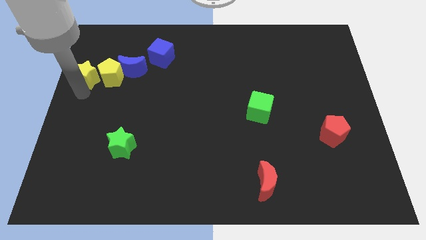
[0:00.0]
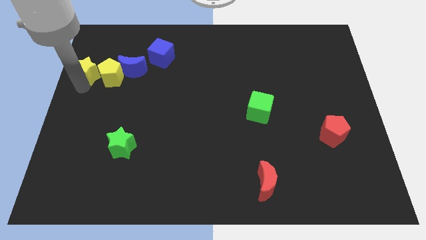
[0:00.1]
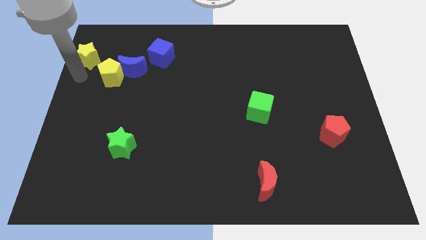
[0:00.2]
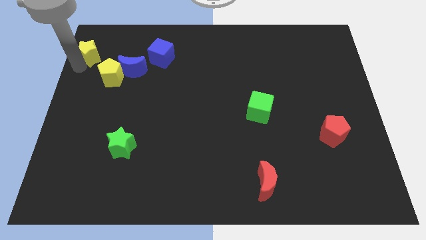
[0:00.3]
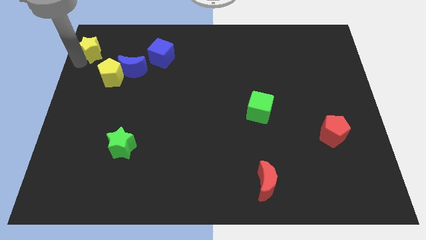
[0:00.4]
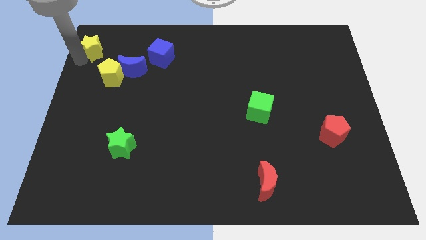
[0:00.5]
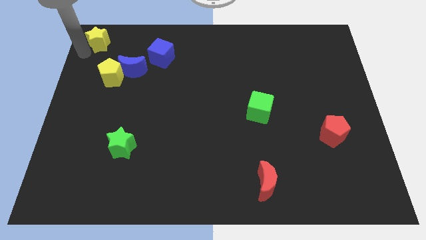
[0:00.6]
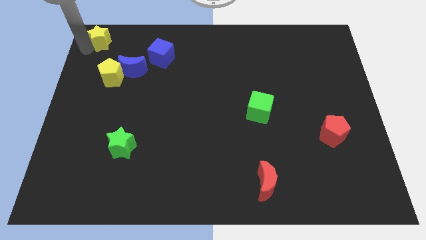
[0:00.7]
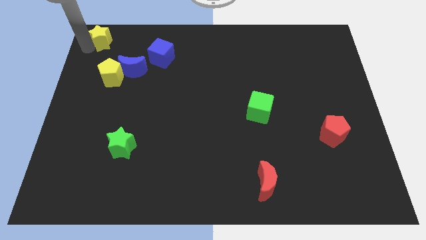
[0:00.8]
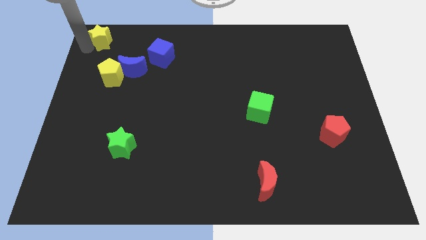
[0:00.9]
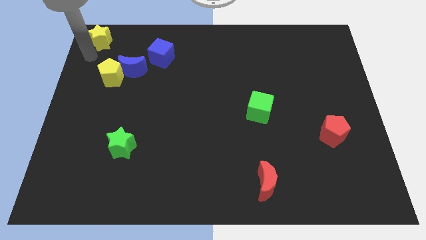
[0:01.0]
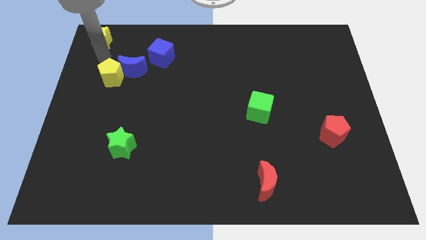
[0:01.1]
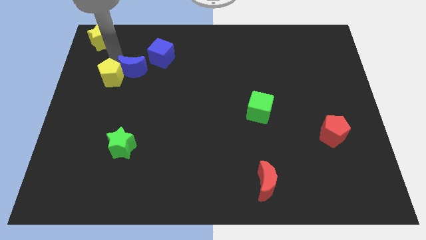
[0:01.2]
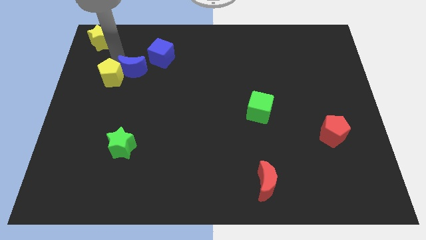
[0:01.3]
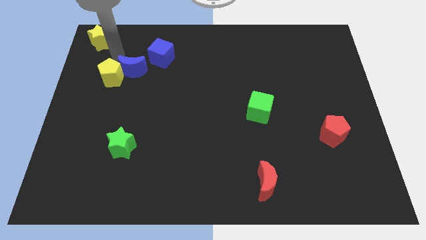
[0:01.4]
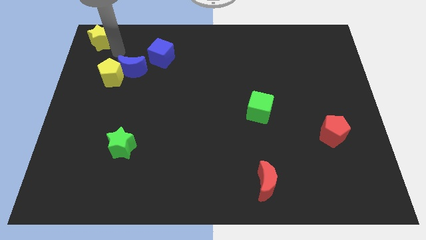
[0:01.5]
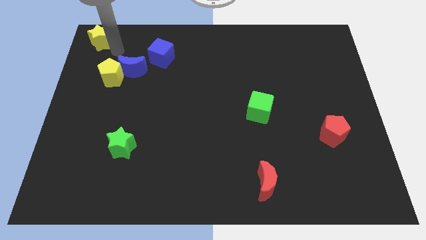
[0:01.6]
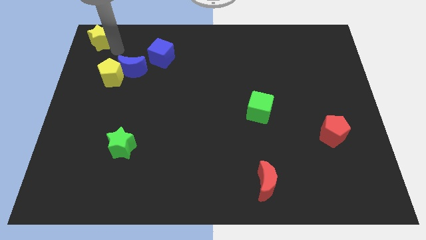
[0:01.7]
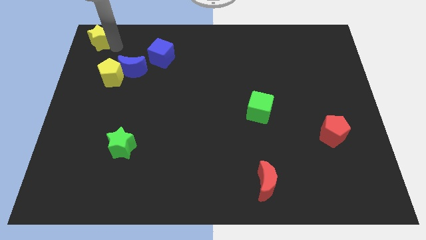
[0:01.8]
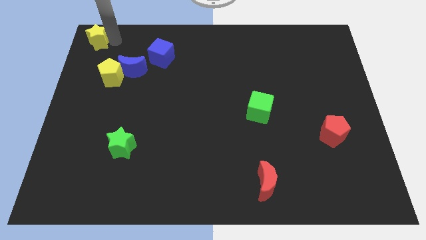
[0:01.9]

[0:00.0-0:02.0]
move the yellow star to the top left corner of the board

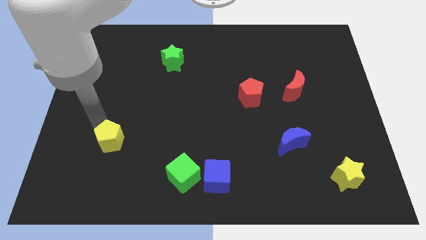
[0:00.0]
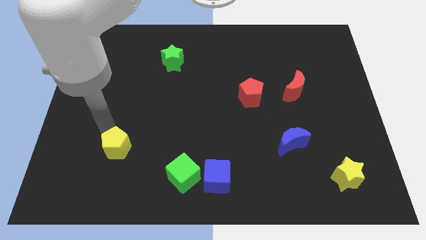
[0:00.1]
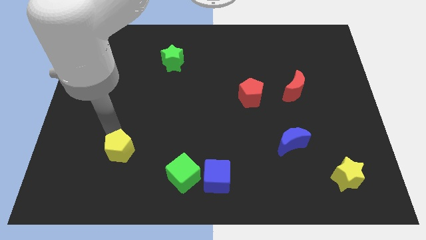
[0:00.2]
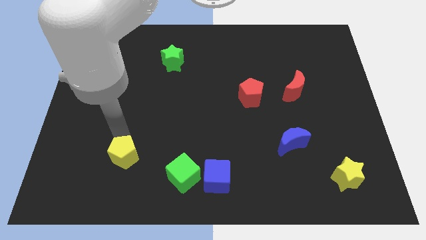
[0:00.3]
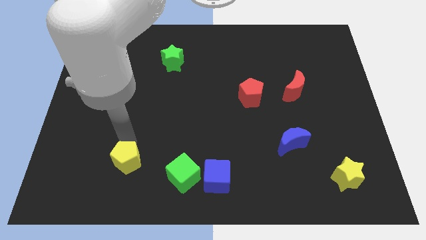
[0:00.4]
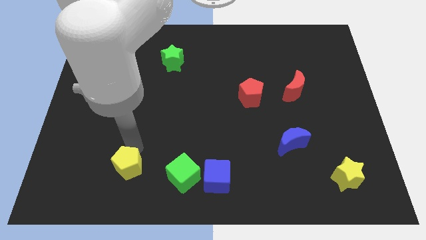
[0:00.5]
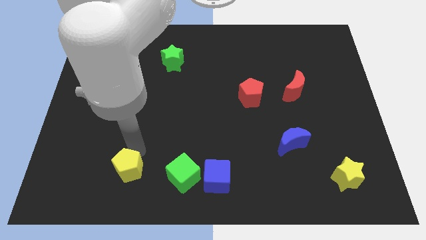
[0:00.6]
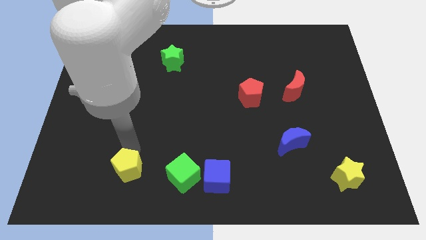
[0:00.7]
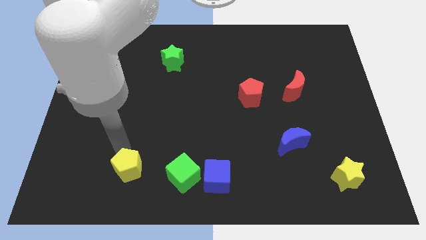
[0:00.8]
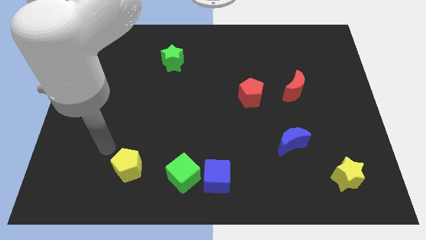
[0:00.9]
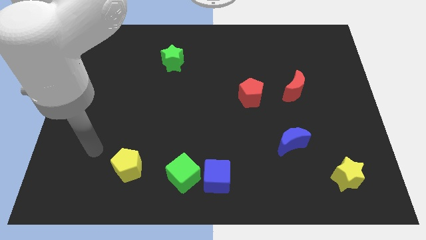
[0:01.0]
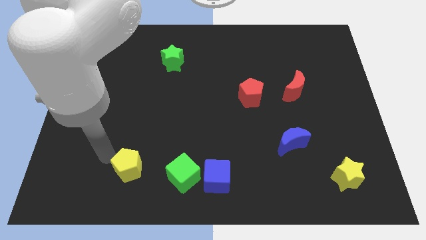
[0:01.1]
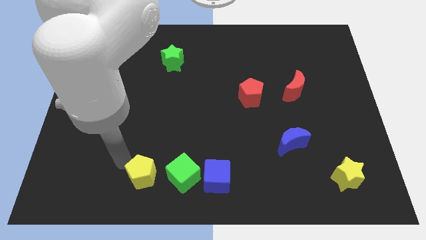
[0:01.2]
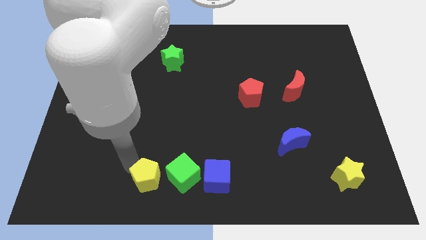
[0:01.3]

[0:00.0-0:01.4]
push yellow star beside green cube

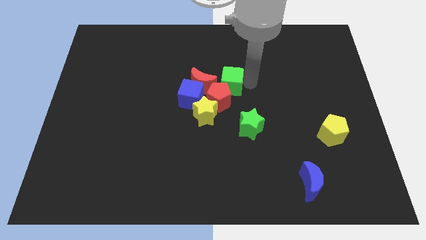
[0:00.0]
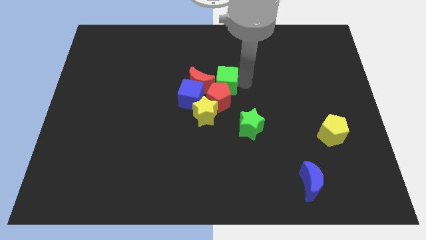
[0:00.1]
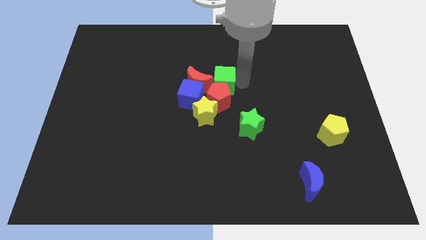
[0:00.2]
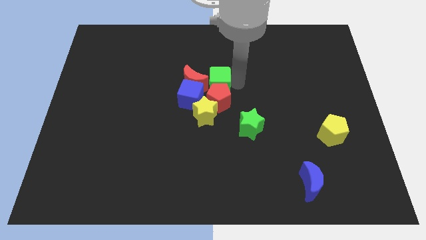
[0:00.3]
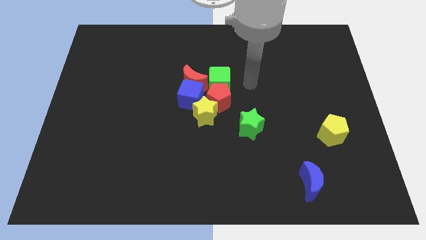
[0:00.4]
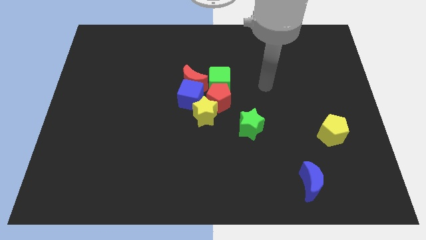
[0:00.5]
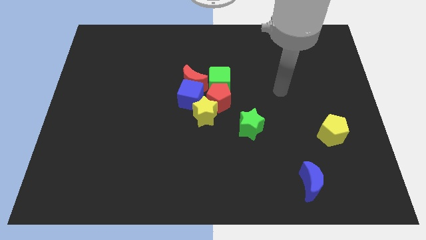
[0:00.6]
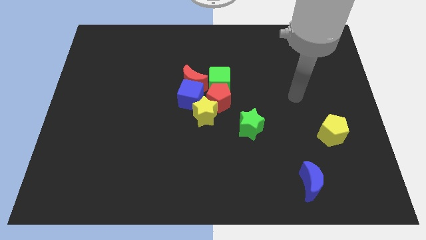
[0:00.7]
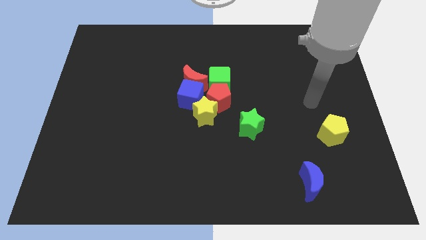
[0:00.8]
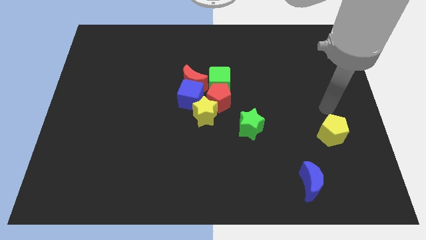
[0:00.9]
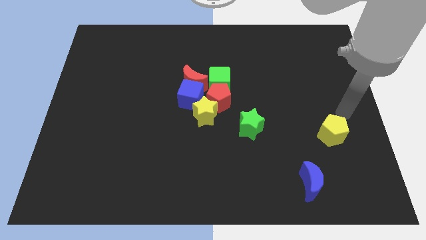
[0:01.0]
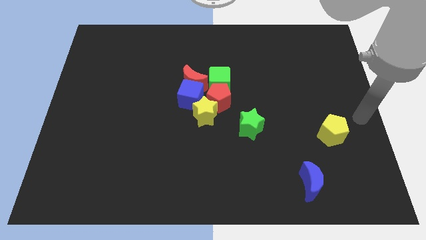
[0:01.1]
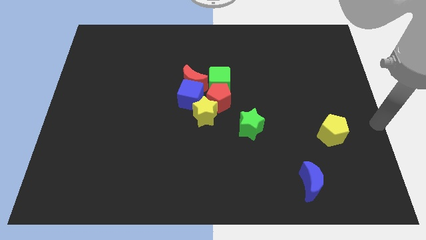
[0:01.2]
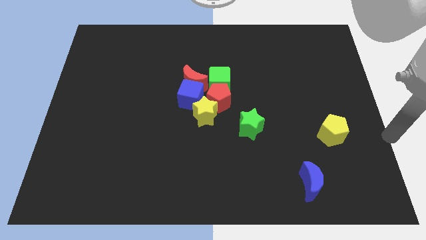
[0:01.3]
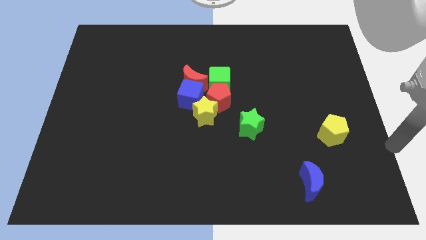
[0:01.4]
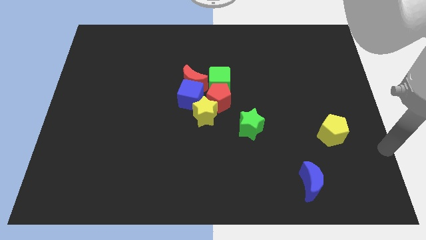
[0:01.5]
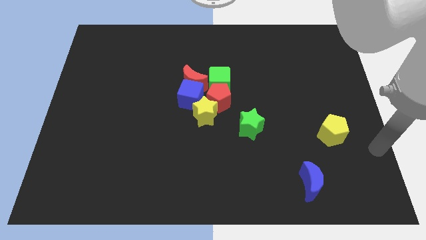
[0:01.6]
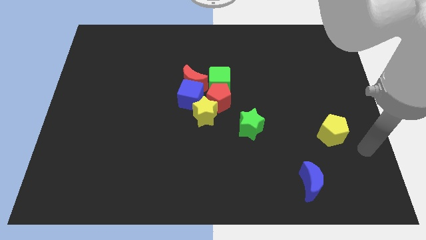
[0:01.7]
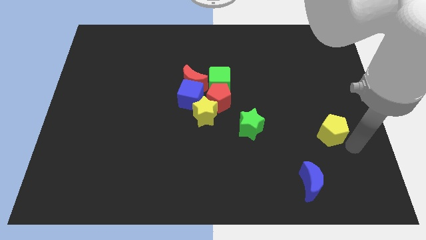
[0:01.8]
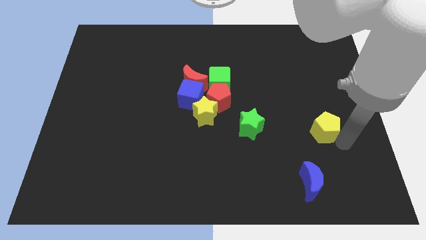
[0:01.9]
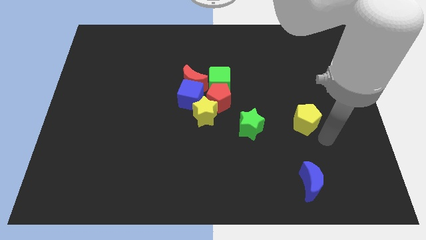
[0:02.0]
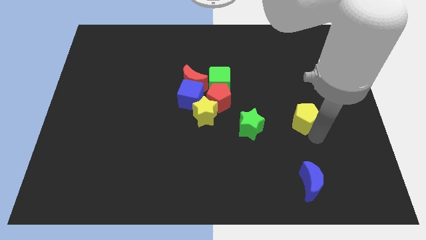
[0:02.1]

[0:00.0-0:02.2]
push the yellow pentagon right to the green star

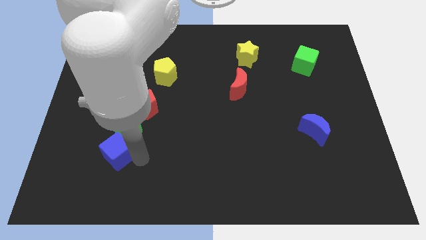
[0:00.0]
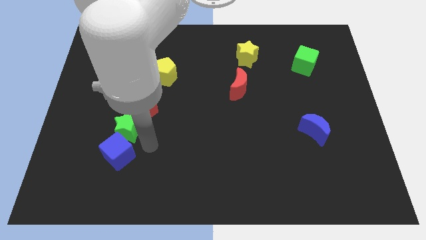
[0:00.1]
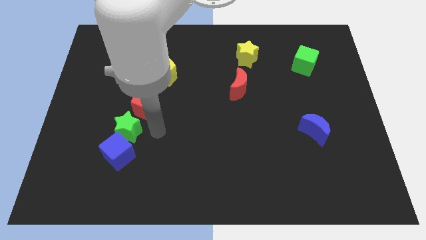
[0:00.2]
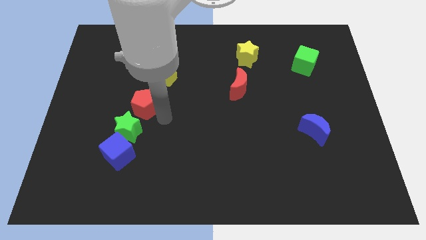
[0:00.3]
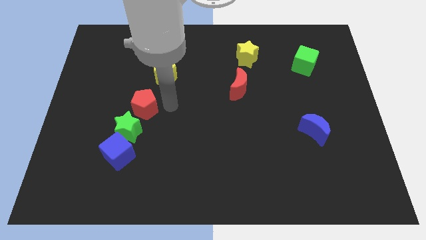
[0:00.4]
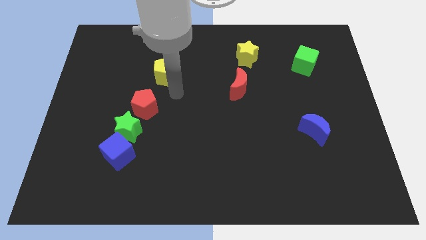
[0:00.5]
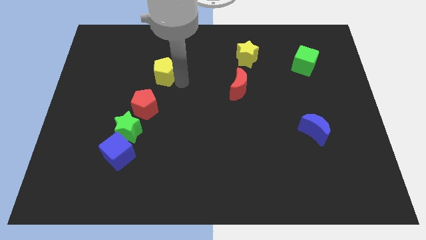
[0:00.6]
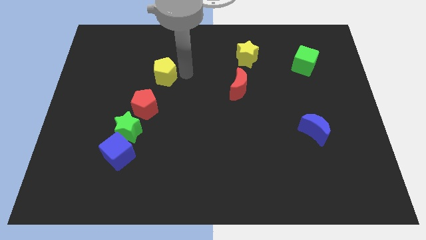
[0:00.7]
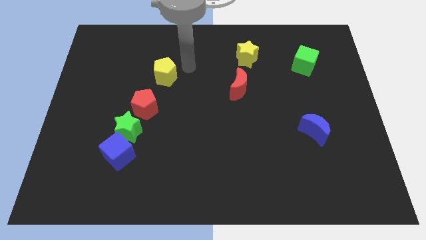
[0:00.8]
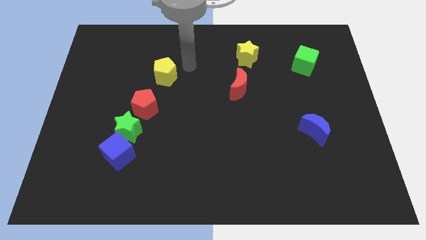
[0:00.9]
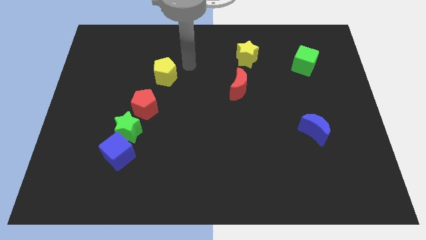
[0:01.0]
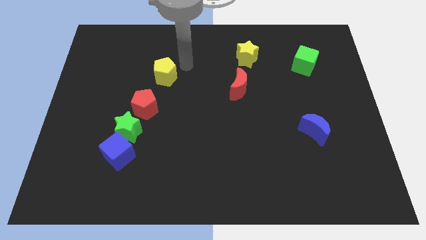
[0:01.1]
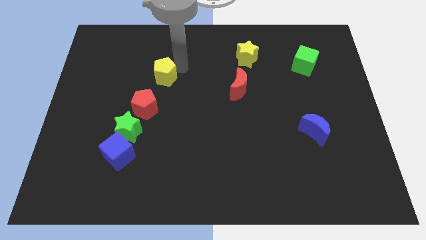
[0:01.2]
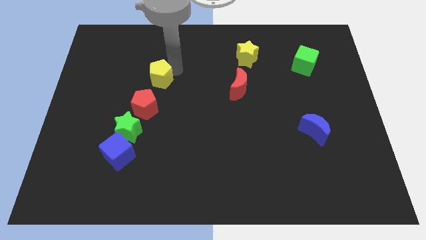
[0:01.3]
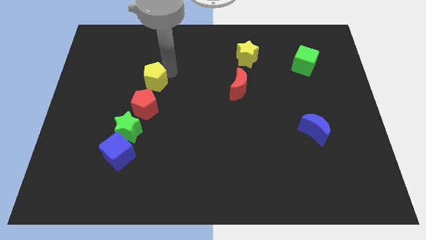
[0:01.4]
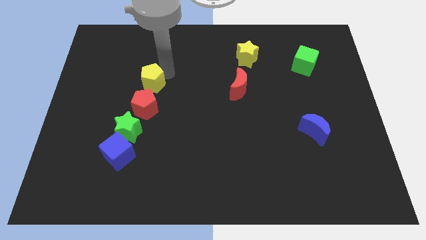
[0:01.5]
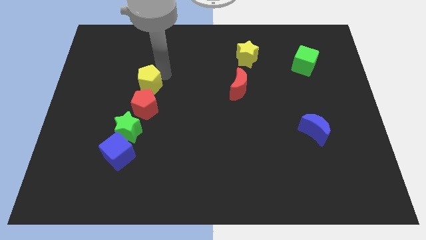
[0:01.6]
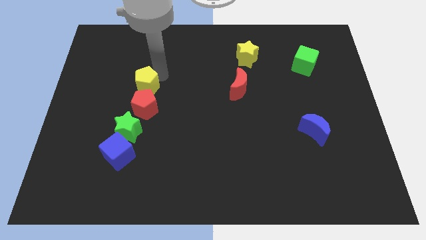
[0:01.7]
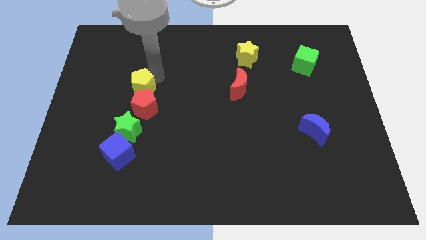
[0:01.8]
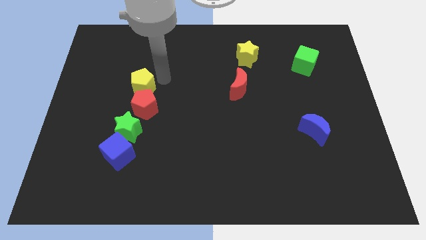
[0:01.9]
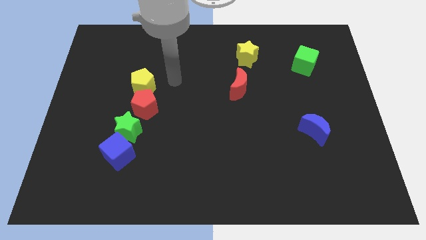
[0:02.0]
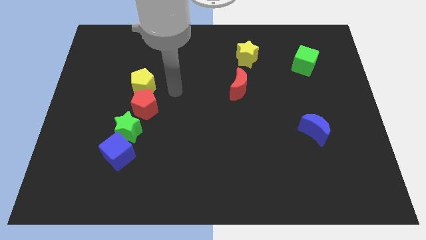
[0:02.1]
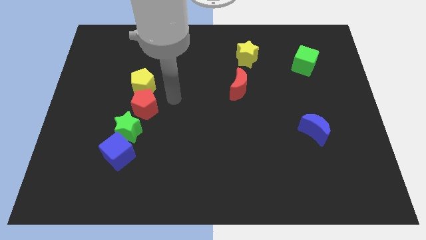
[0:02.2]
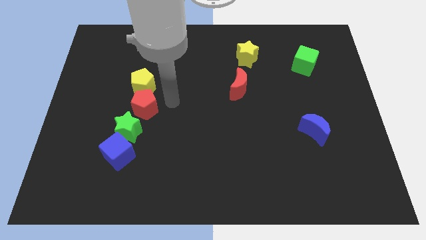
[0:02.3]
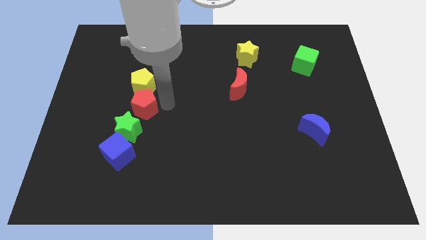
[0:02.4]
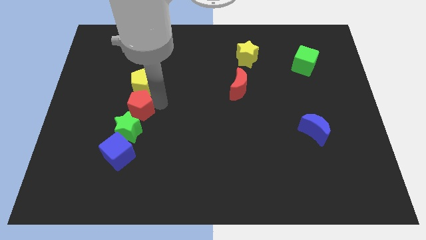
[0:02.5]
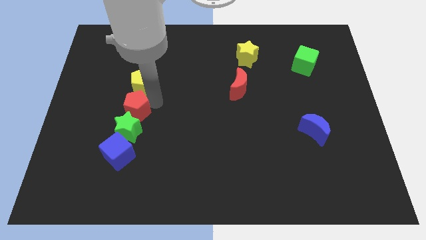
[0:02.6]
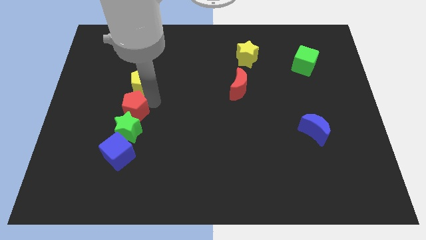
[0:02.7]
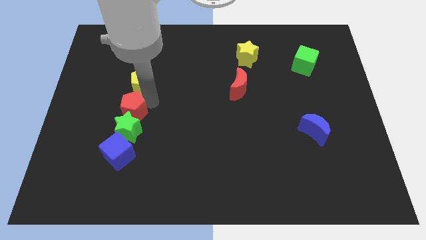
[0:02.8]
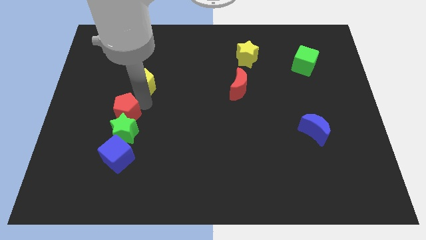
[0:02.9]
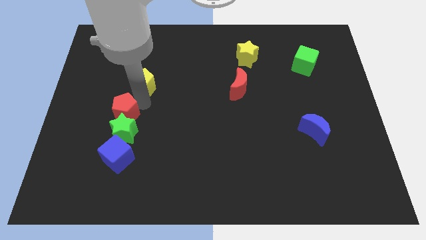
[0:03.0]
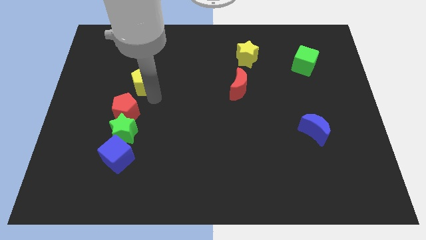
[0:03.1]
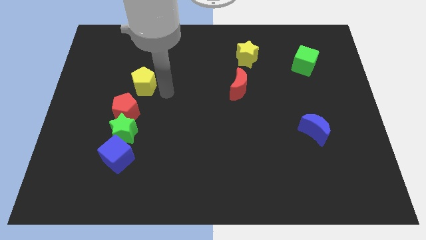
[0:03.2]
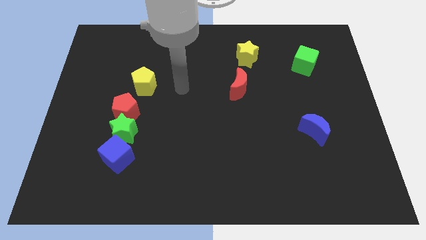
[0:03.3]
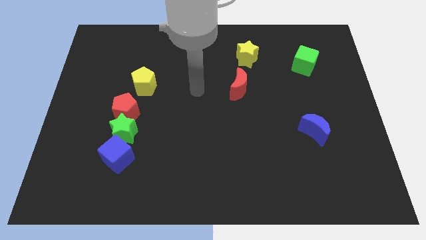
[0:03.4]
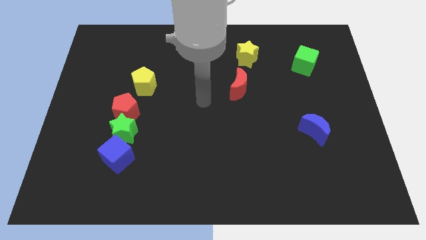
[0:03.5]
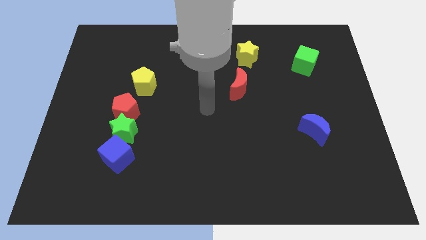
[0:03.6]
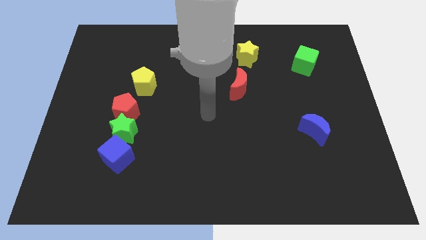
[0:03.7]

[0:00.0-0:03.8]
push the yellow and red pentagons slightly to the left
